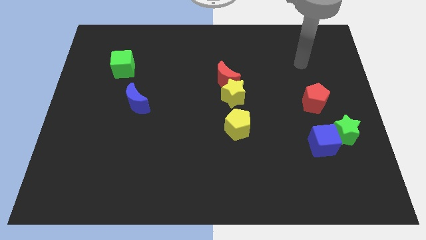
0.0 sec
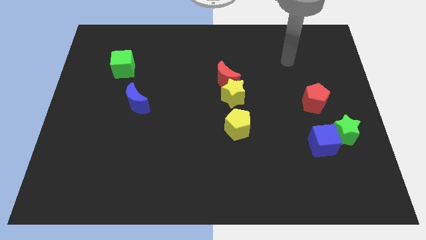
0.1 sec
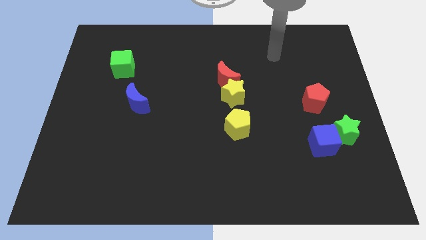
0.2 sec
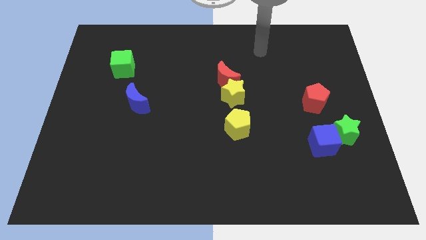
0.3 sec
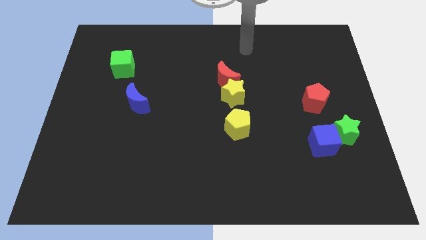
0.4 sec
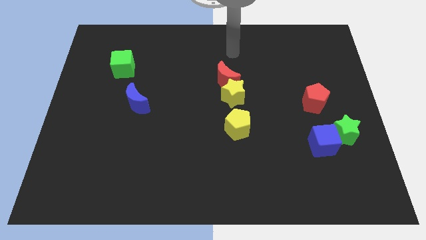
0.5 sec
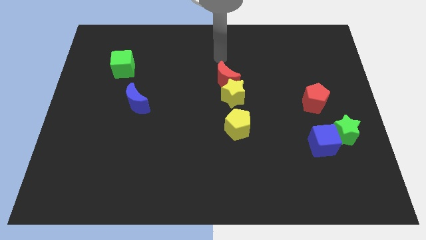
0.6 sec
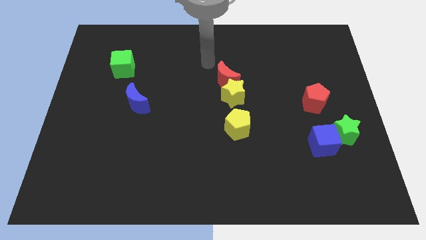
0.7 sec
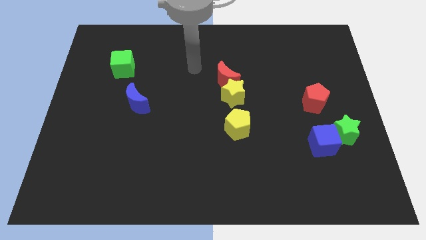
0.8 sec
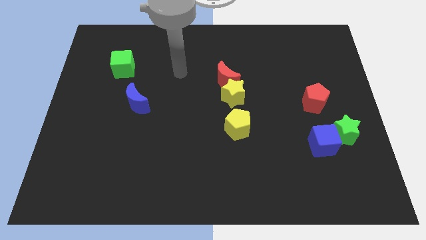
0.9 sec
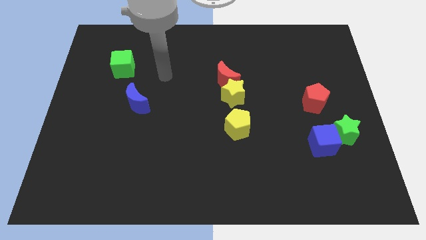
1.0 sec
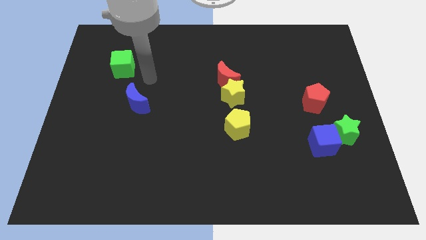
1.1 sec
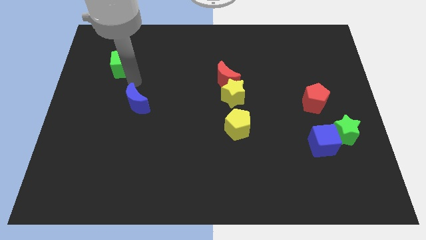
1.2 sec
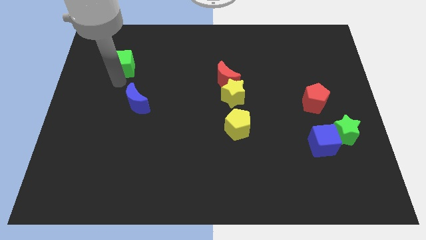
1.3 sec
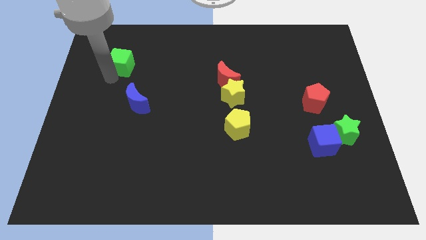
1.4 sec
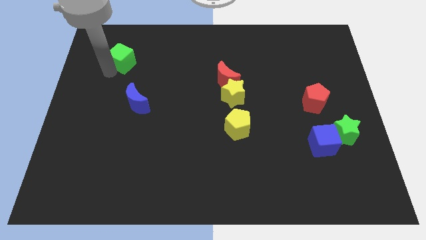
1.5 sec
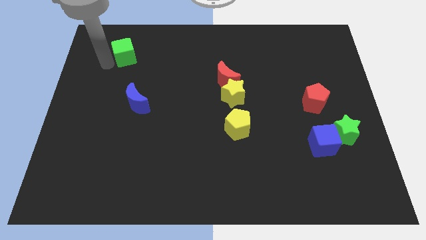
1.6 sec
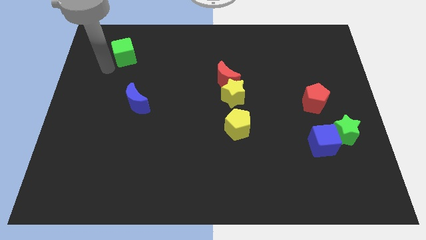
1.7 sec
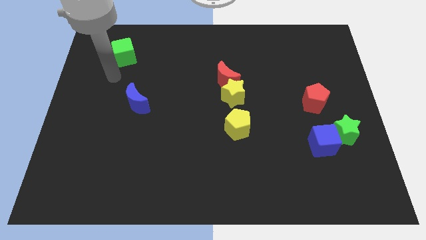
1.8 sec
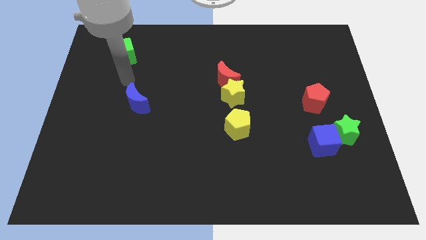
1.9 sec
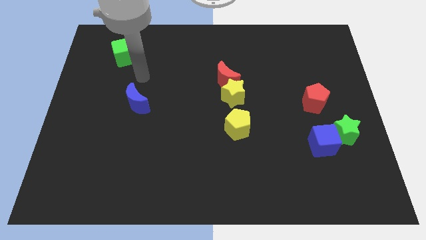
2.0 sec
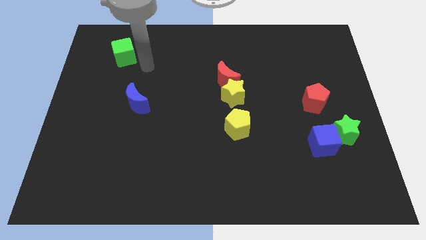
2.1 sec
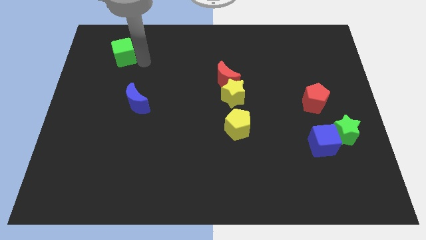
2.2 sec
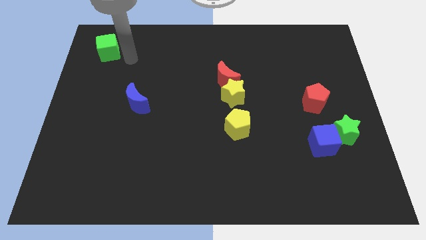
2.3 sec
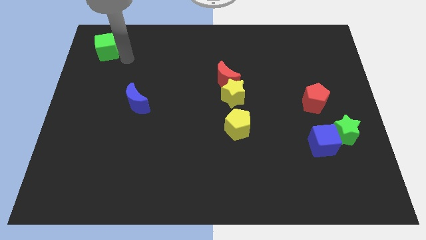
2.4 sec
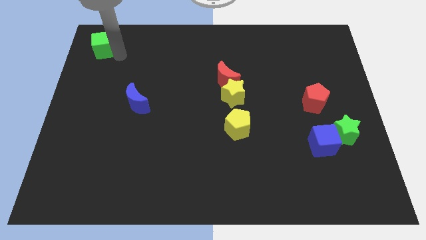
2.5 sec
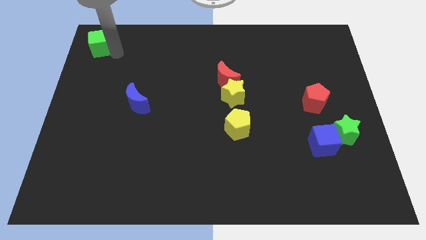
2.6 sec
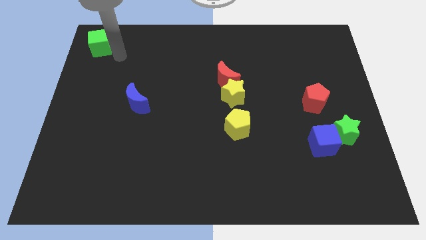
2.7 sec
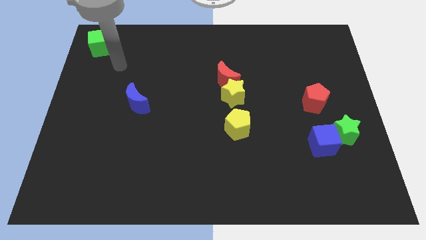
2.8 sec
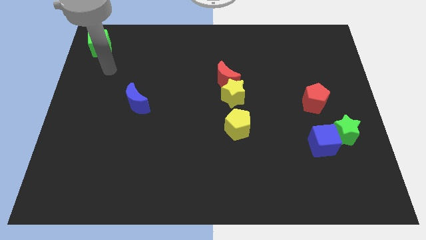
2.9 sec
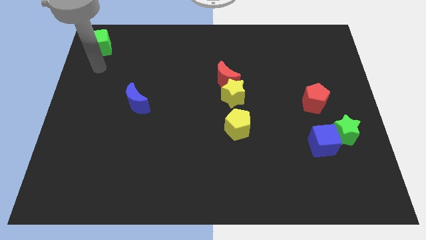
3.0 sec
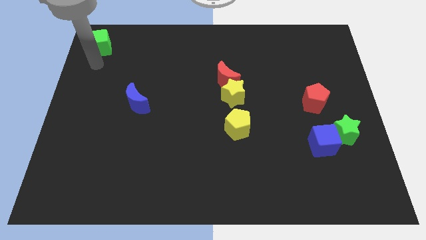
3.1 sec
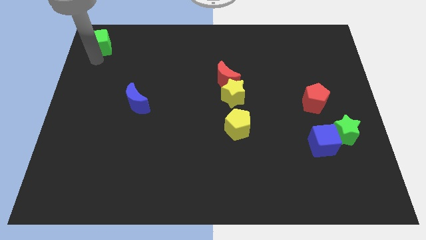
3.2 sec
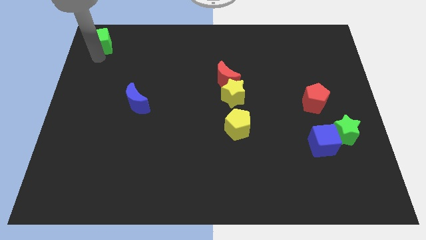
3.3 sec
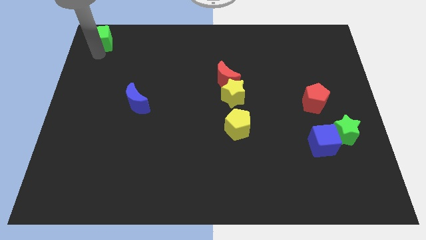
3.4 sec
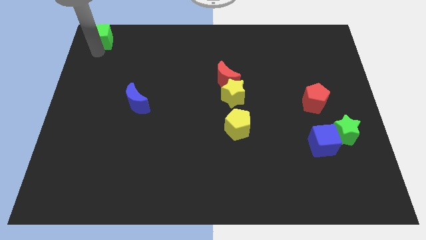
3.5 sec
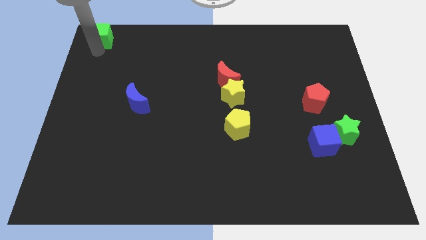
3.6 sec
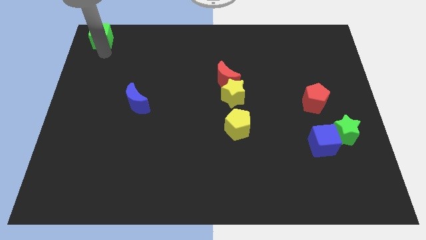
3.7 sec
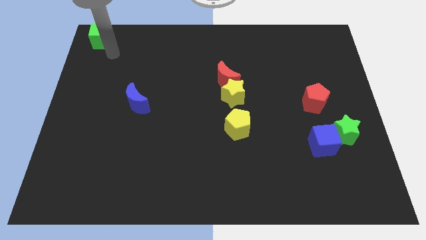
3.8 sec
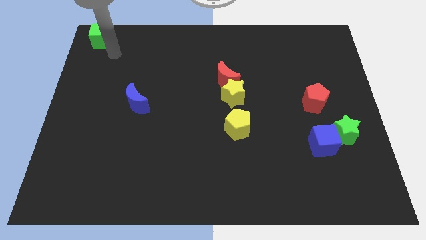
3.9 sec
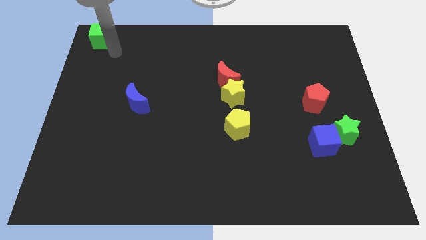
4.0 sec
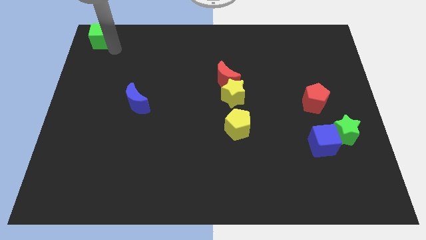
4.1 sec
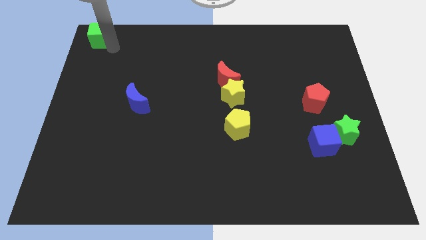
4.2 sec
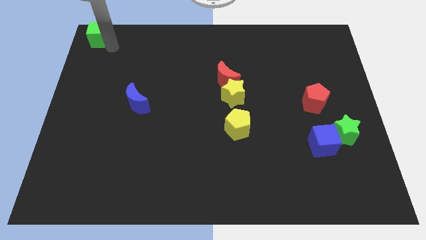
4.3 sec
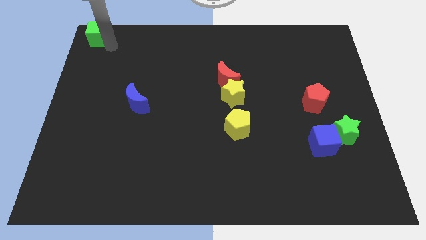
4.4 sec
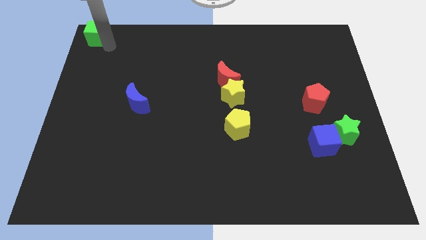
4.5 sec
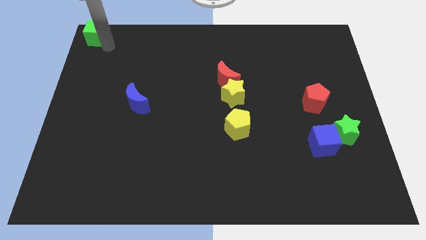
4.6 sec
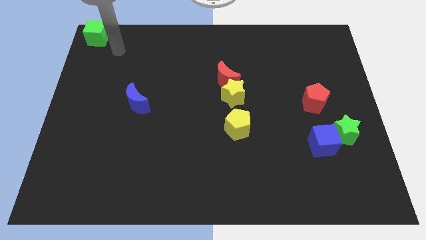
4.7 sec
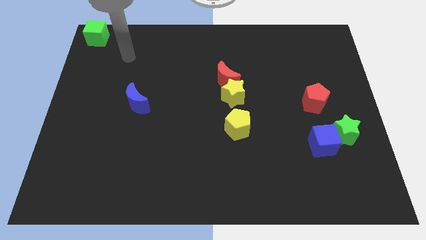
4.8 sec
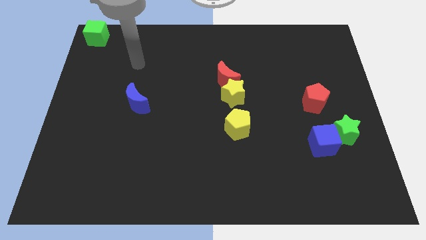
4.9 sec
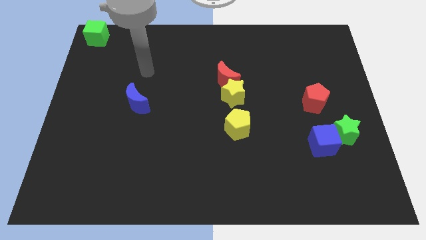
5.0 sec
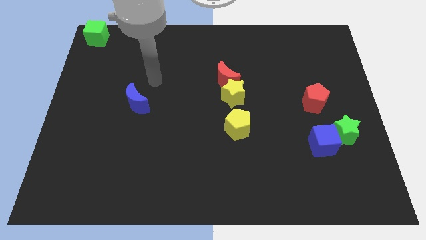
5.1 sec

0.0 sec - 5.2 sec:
push the green cube to the top left corner of the board

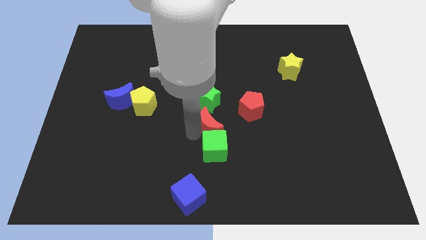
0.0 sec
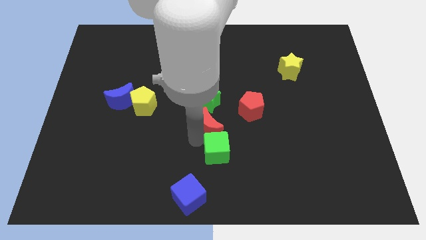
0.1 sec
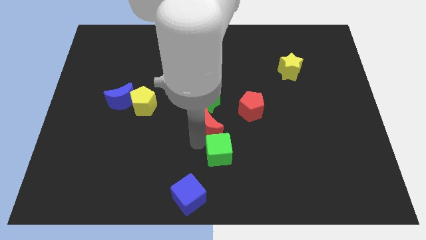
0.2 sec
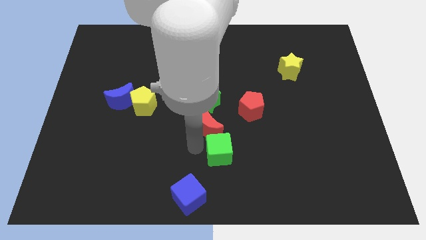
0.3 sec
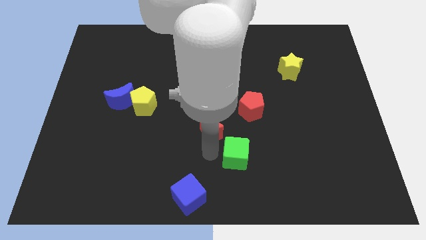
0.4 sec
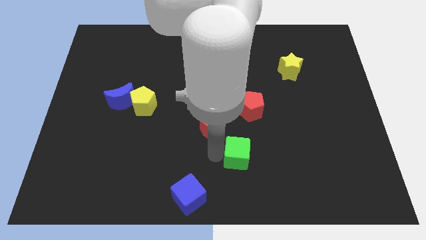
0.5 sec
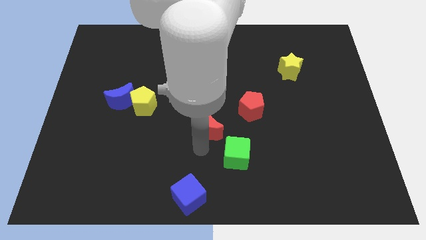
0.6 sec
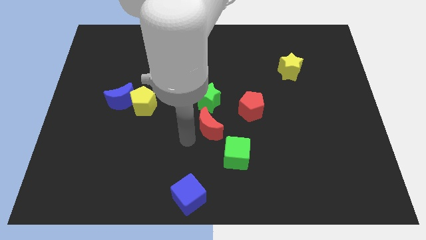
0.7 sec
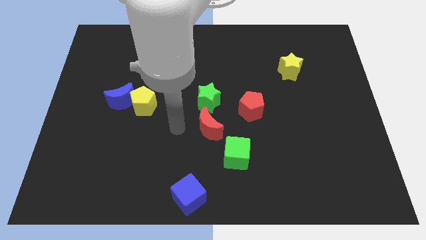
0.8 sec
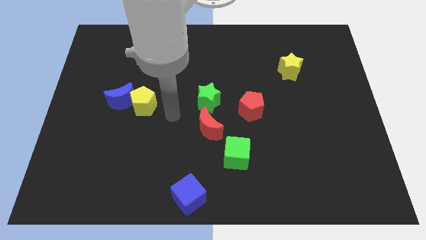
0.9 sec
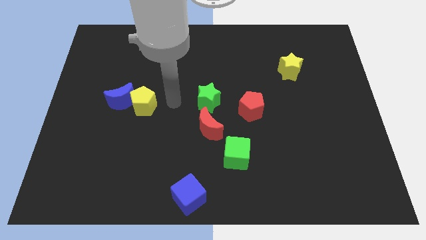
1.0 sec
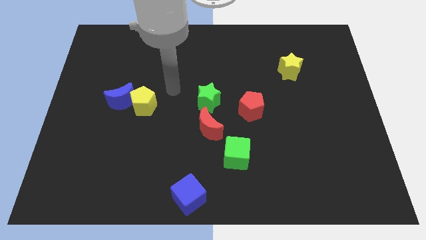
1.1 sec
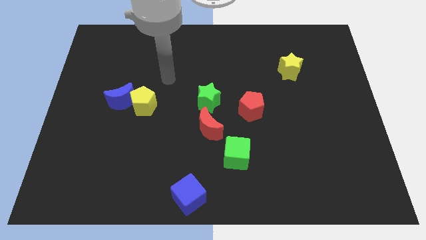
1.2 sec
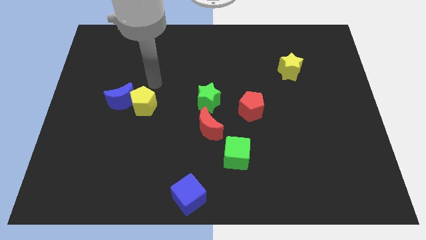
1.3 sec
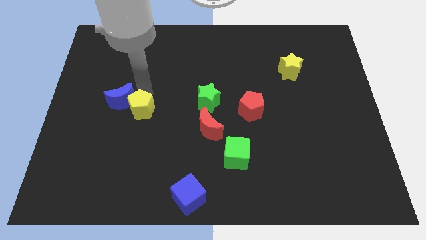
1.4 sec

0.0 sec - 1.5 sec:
move the green cube slightly to the right side of the board

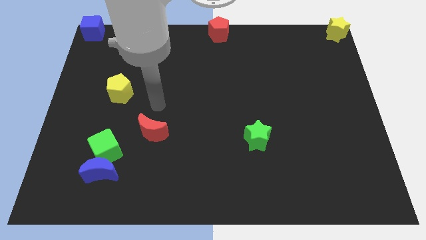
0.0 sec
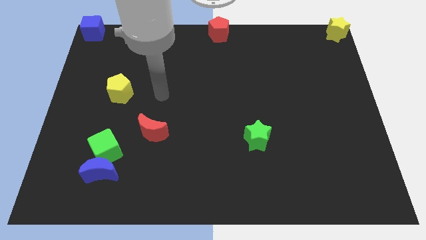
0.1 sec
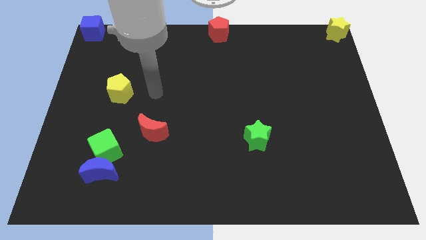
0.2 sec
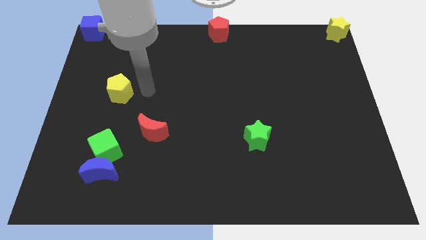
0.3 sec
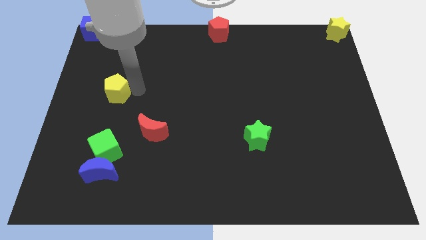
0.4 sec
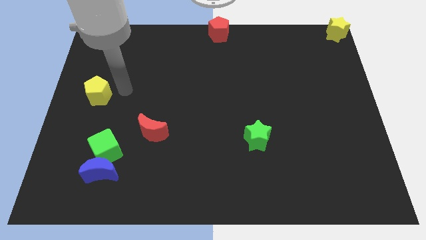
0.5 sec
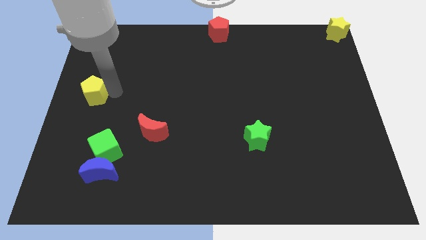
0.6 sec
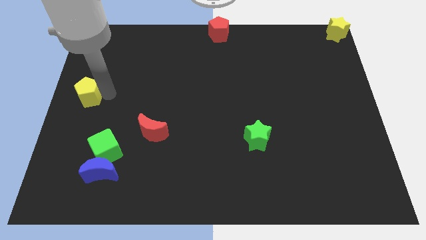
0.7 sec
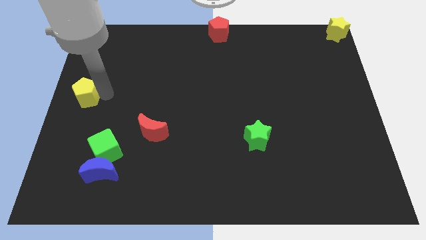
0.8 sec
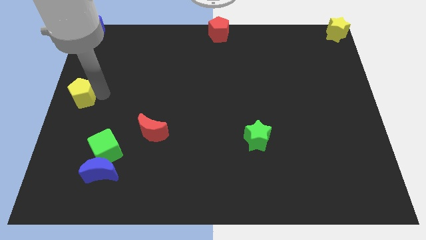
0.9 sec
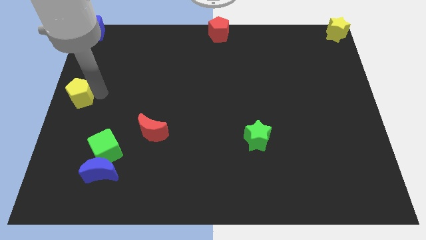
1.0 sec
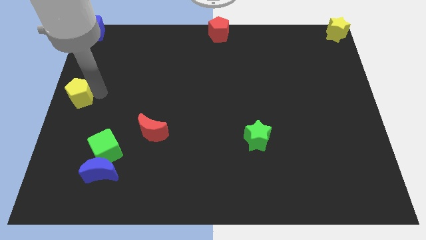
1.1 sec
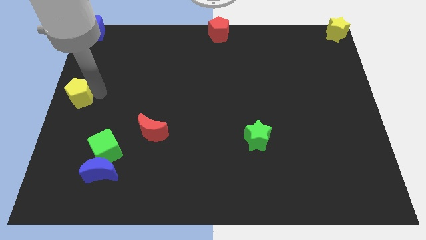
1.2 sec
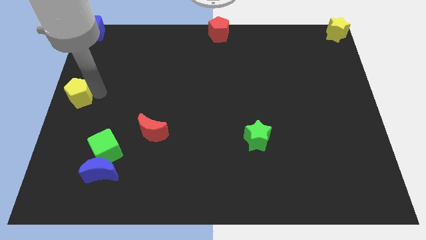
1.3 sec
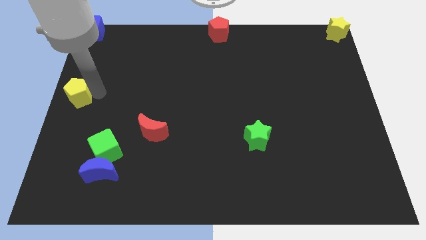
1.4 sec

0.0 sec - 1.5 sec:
slide the yellow pentagon to the center left side of the board

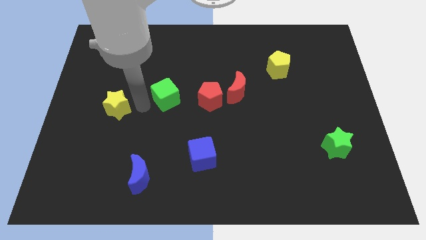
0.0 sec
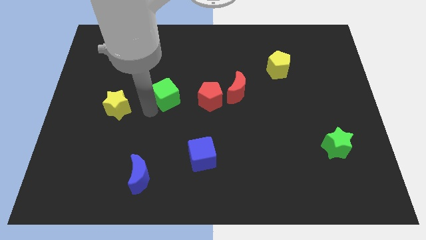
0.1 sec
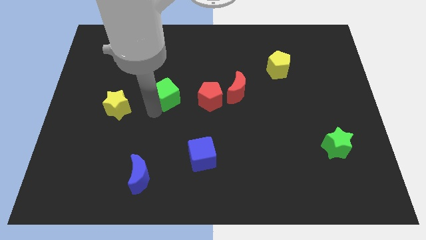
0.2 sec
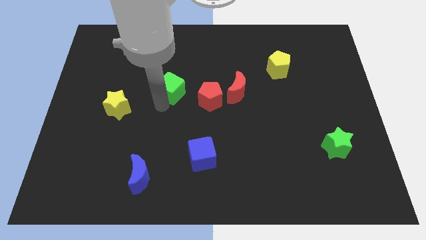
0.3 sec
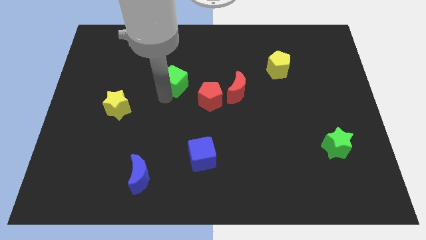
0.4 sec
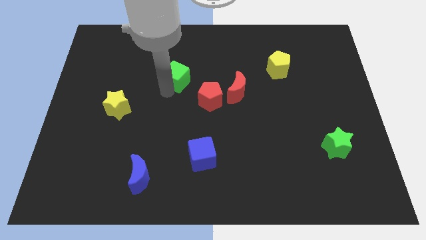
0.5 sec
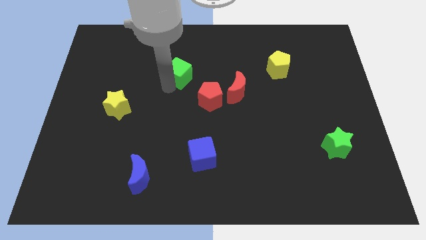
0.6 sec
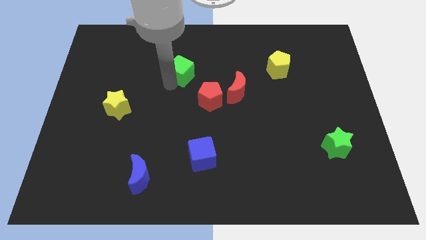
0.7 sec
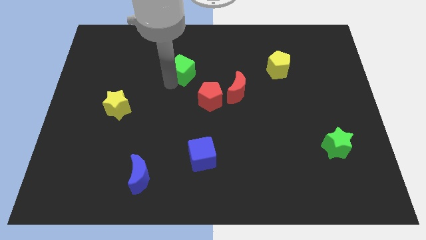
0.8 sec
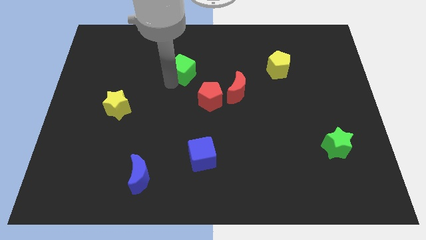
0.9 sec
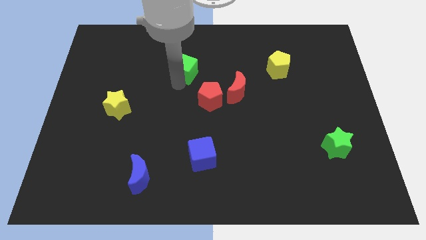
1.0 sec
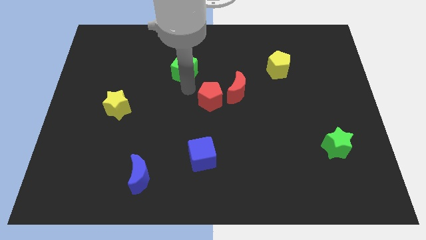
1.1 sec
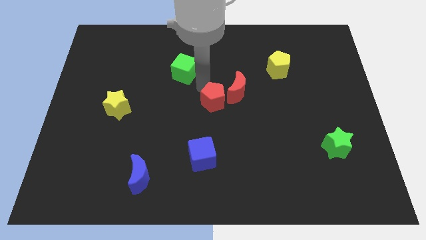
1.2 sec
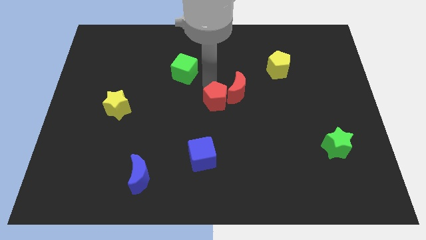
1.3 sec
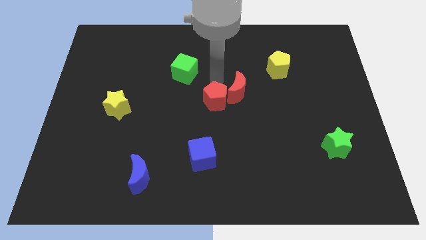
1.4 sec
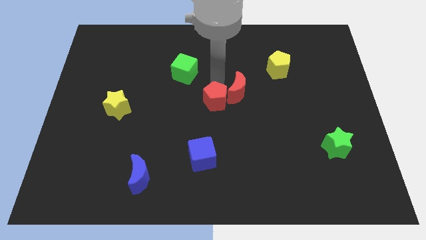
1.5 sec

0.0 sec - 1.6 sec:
slightly move the green cube towards the top
